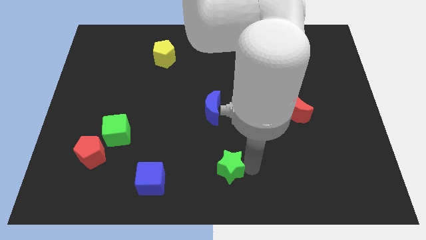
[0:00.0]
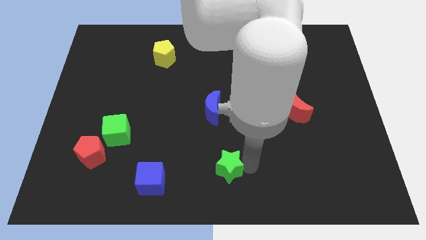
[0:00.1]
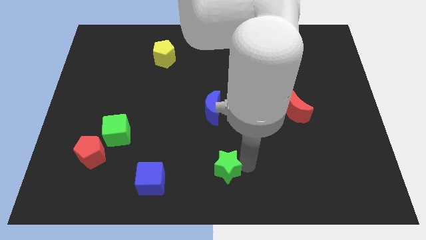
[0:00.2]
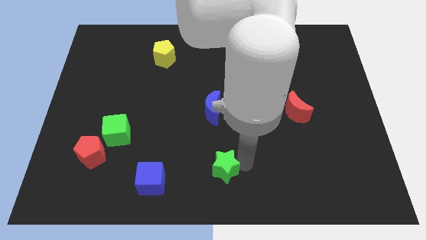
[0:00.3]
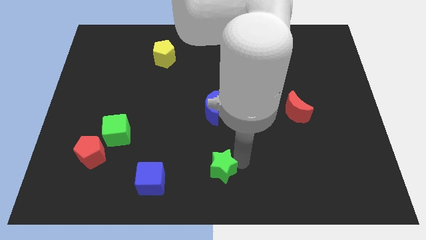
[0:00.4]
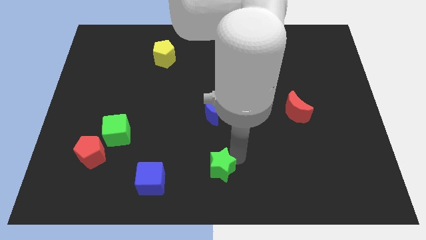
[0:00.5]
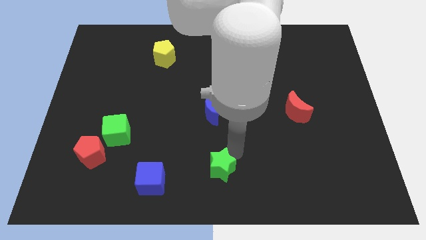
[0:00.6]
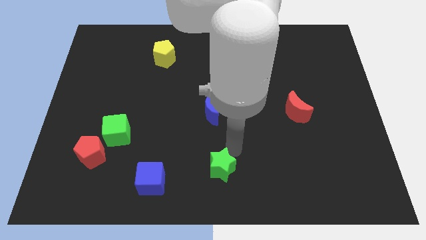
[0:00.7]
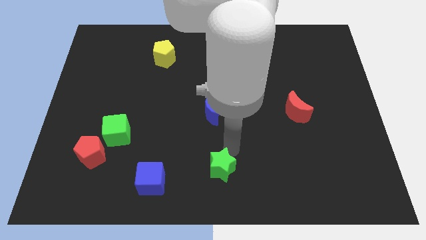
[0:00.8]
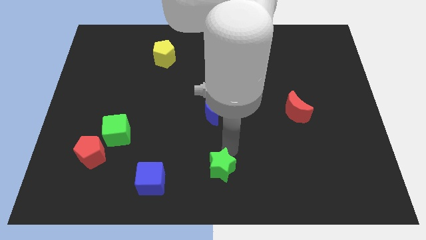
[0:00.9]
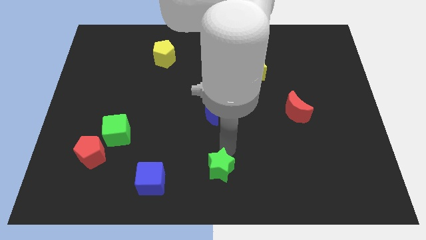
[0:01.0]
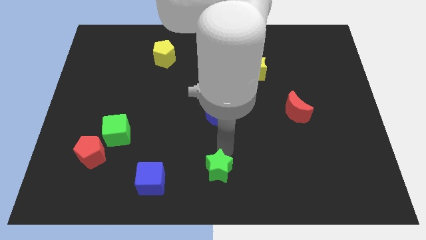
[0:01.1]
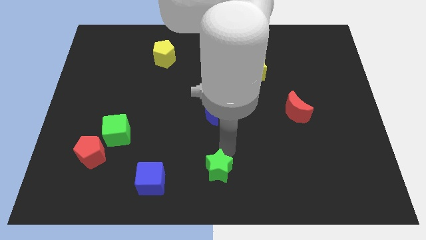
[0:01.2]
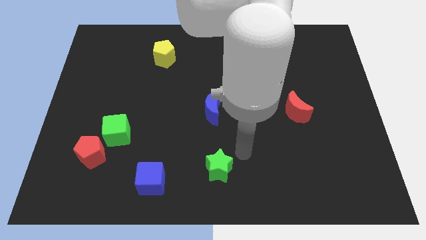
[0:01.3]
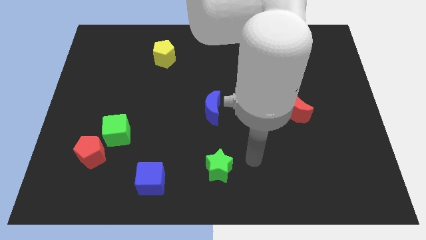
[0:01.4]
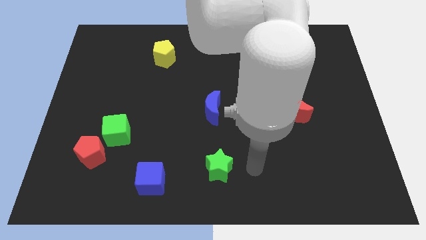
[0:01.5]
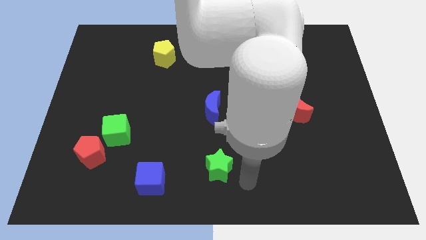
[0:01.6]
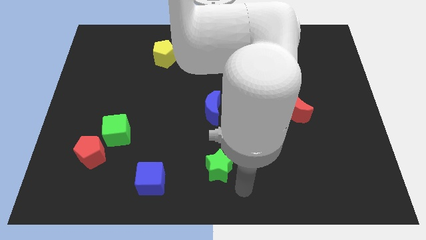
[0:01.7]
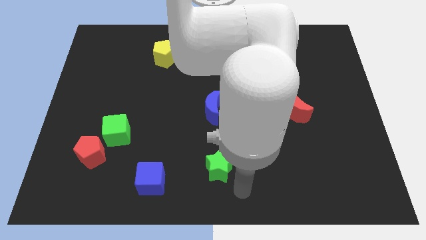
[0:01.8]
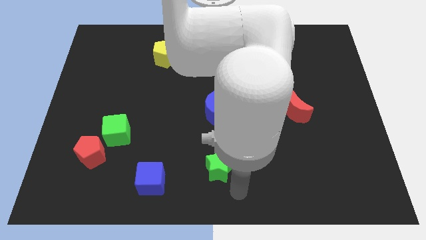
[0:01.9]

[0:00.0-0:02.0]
put the green star at the bottom center of the board

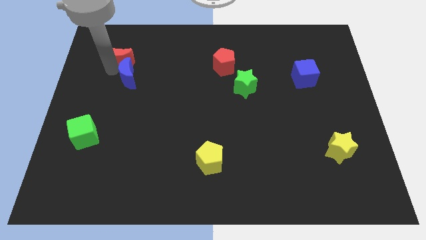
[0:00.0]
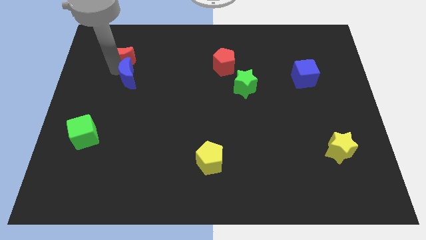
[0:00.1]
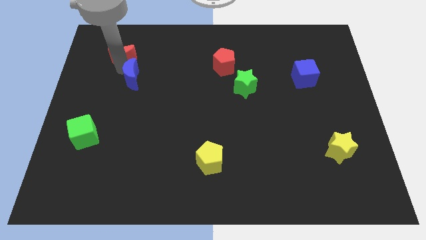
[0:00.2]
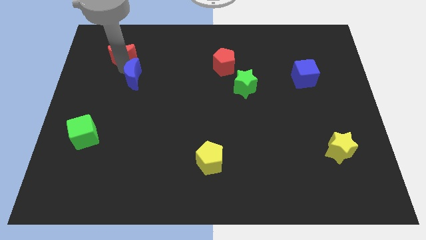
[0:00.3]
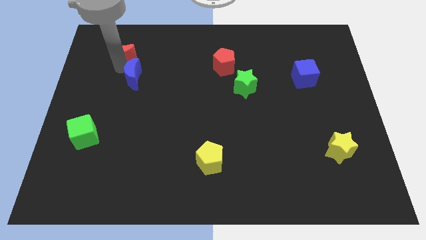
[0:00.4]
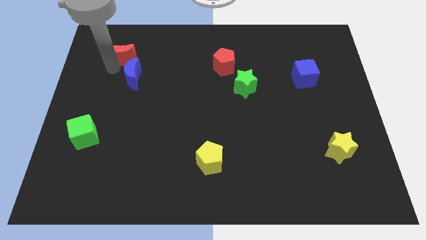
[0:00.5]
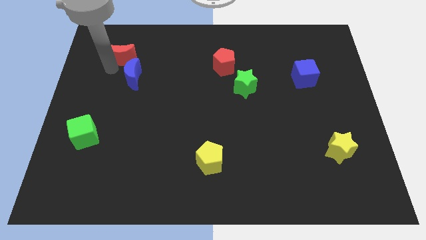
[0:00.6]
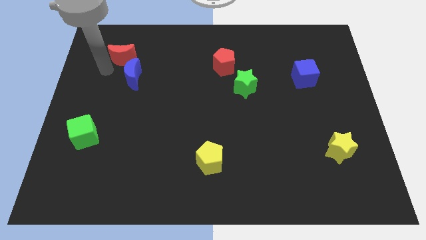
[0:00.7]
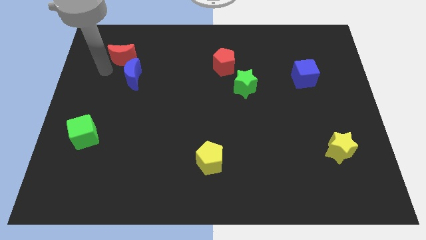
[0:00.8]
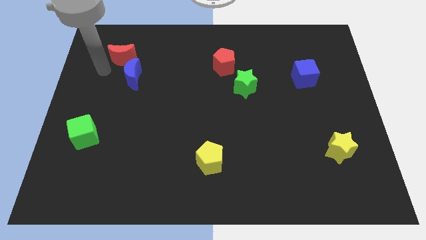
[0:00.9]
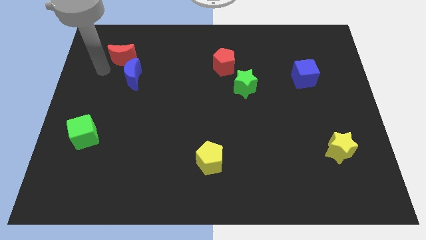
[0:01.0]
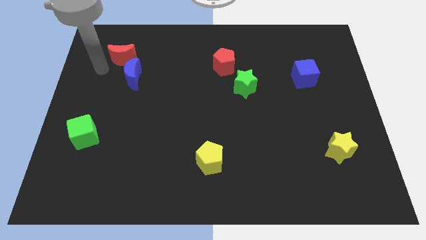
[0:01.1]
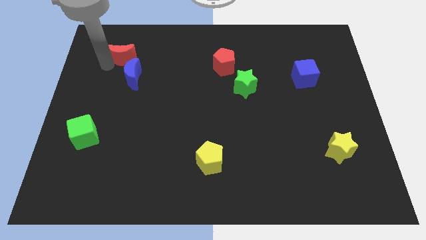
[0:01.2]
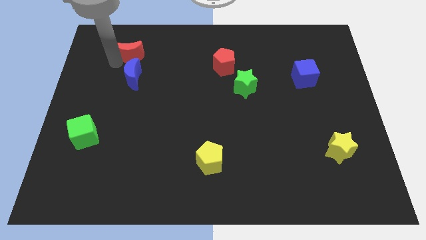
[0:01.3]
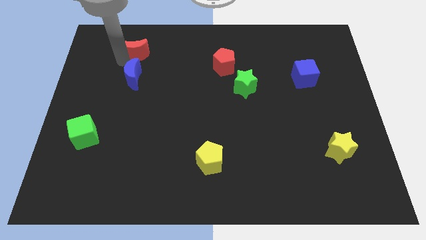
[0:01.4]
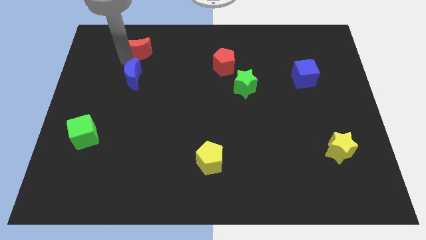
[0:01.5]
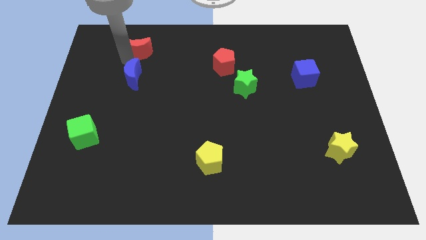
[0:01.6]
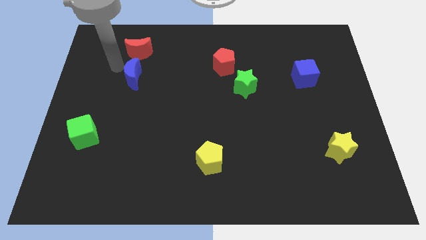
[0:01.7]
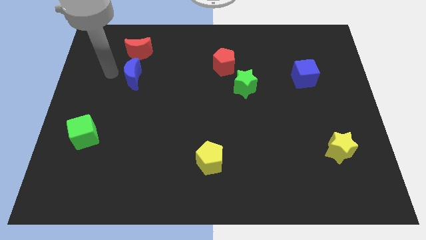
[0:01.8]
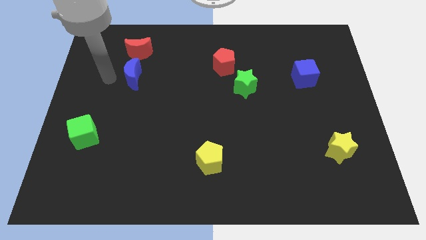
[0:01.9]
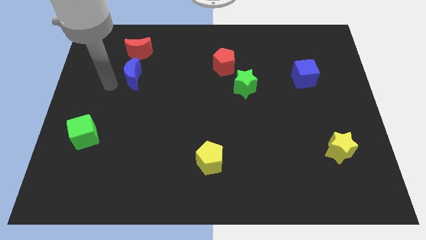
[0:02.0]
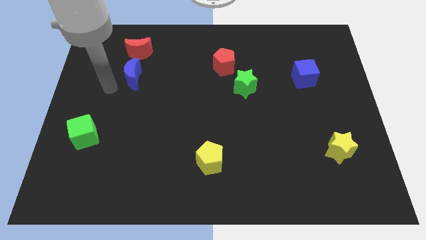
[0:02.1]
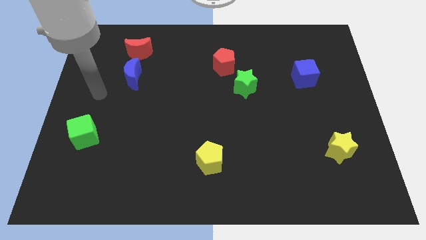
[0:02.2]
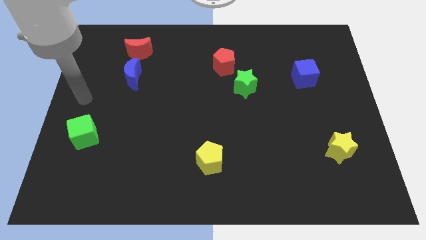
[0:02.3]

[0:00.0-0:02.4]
drag the red moon vertically above the blue moon

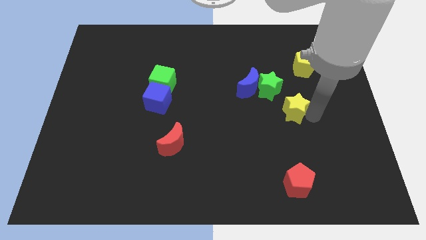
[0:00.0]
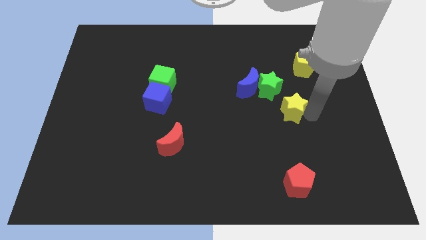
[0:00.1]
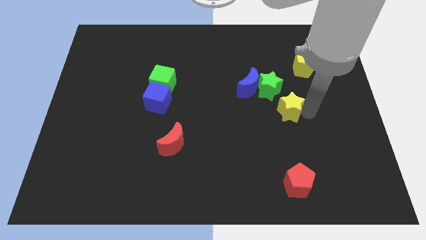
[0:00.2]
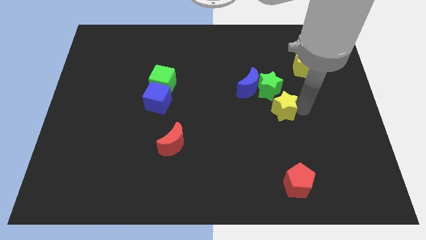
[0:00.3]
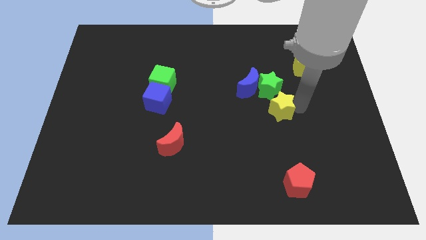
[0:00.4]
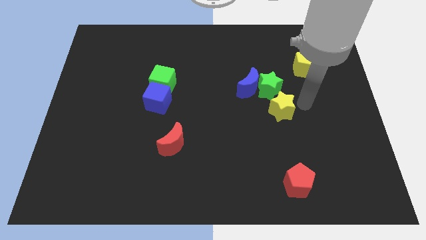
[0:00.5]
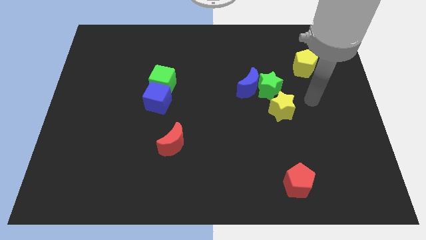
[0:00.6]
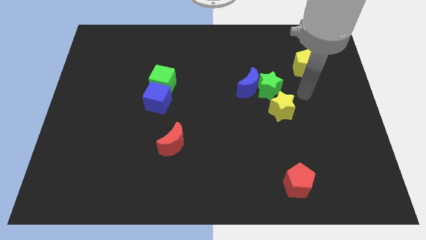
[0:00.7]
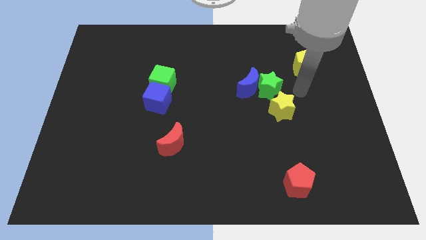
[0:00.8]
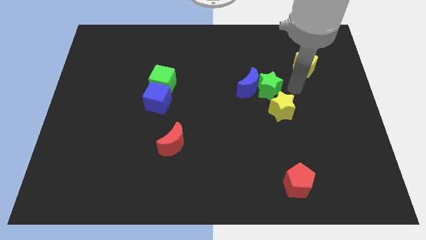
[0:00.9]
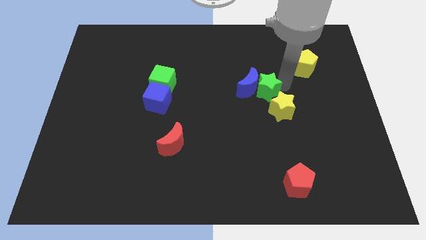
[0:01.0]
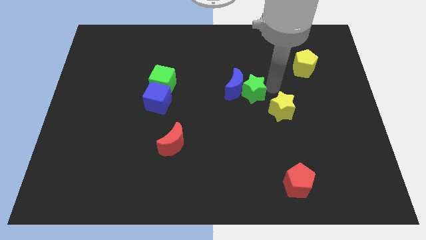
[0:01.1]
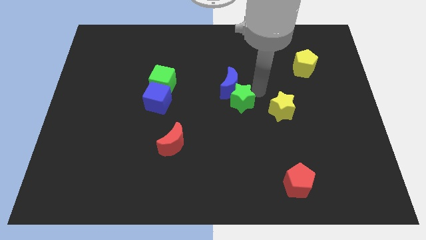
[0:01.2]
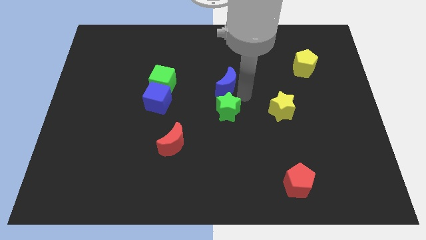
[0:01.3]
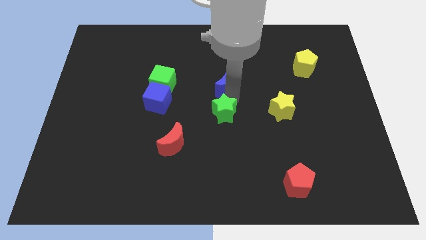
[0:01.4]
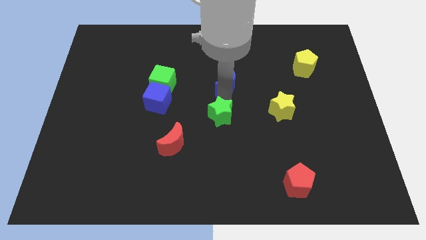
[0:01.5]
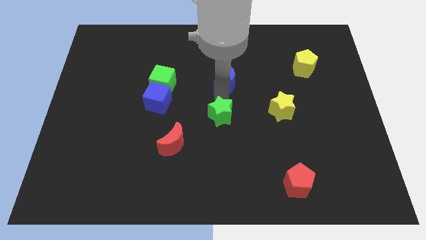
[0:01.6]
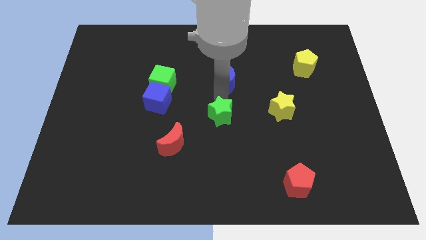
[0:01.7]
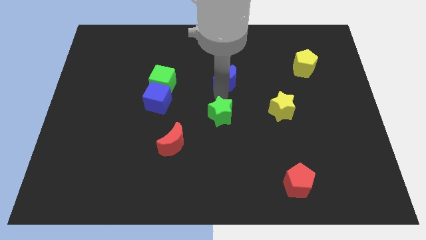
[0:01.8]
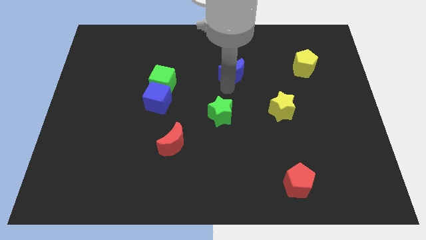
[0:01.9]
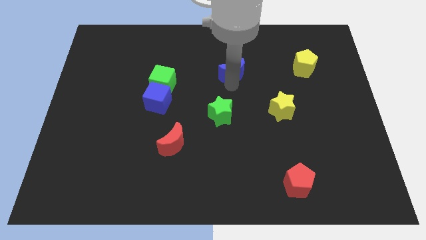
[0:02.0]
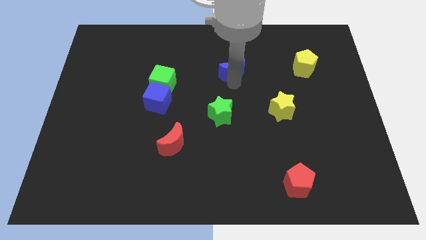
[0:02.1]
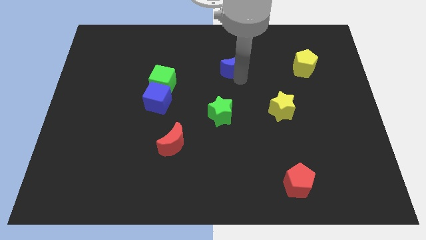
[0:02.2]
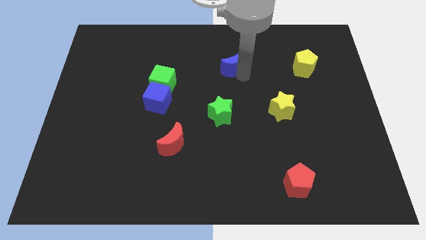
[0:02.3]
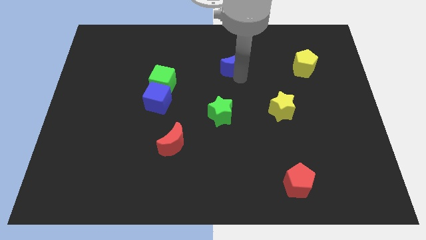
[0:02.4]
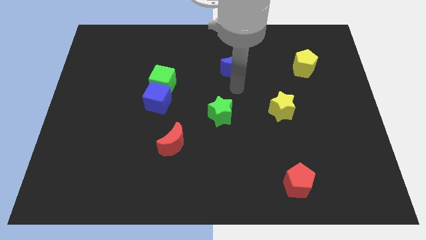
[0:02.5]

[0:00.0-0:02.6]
push blue crescent slightly towards up

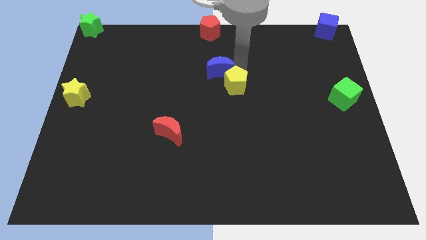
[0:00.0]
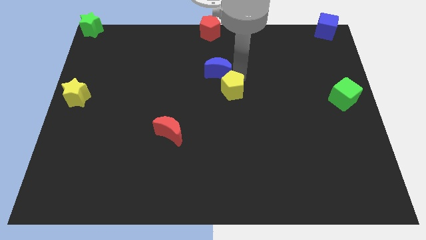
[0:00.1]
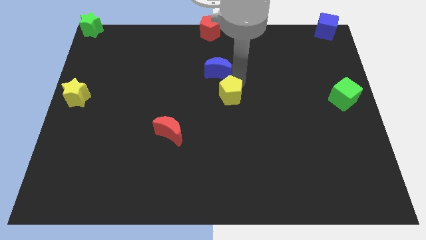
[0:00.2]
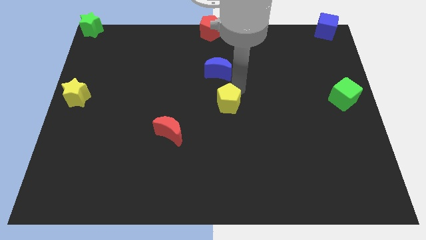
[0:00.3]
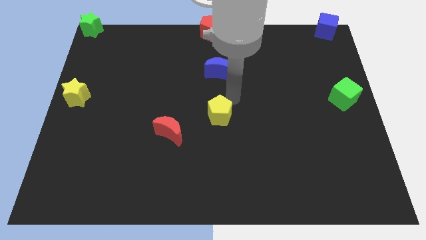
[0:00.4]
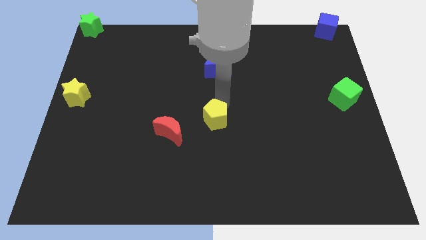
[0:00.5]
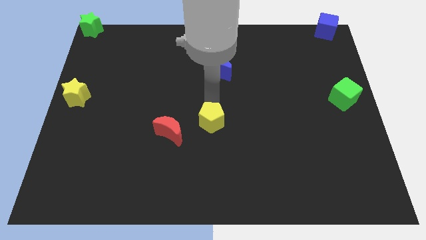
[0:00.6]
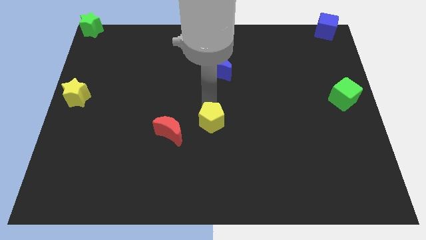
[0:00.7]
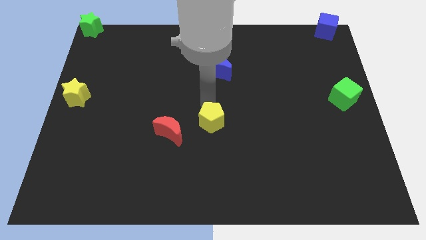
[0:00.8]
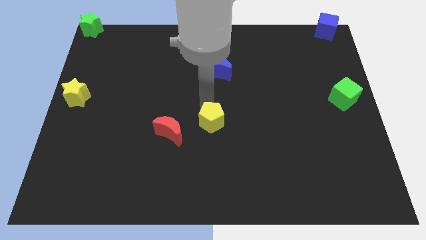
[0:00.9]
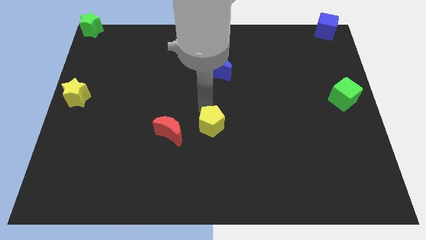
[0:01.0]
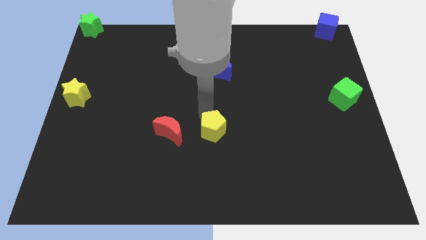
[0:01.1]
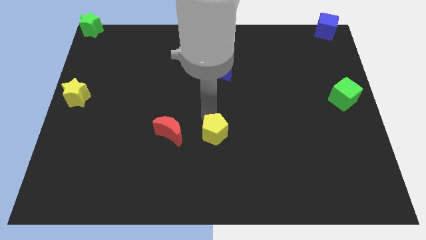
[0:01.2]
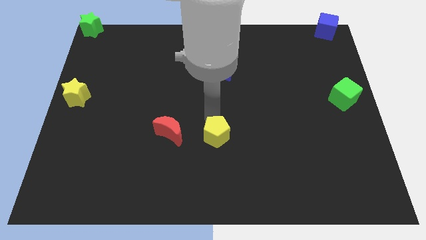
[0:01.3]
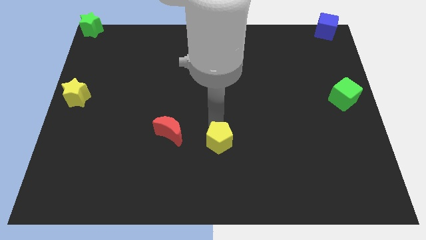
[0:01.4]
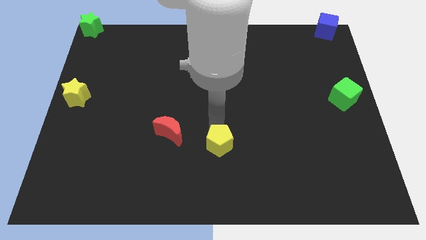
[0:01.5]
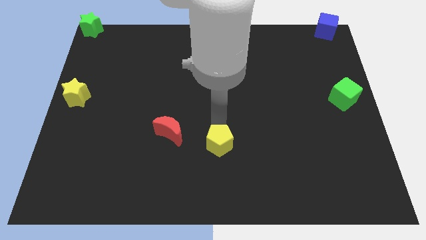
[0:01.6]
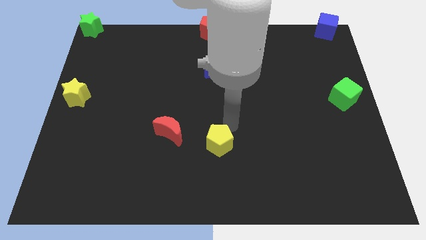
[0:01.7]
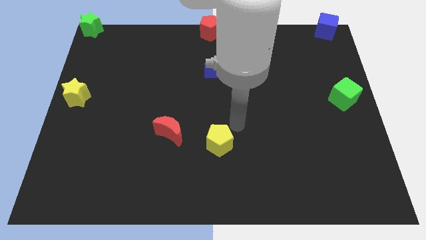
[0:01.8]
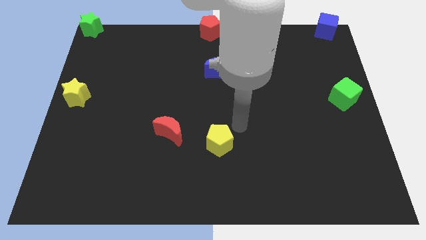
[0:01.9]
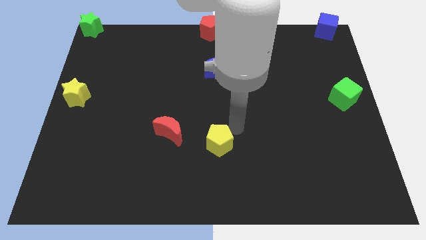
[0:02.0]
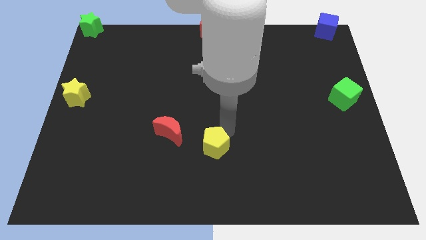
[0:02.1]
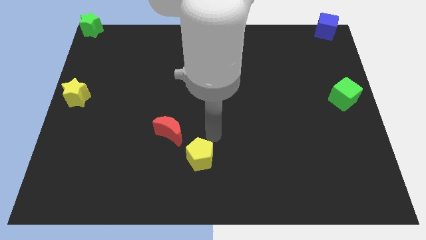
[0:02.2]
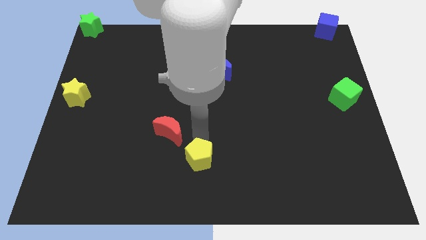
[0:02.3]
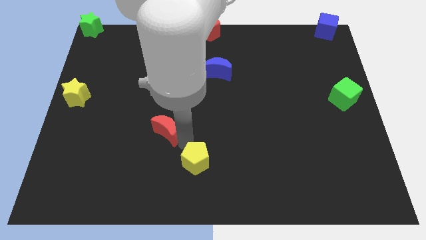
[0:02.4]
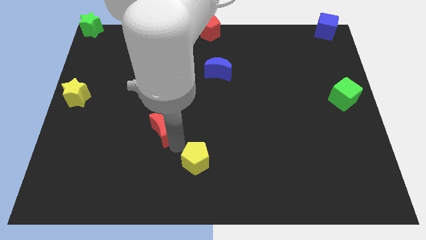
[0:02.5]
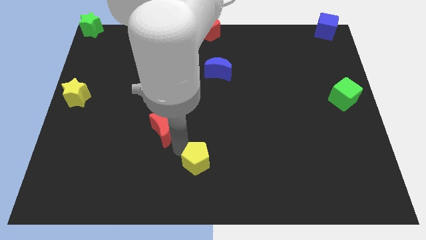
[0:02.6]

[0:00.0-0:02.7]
place the yellow pentagon diagonal to the red moon
